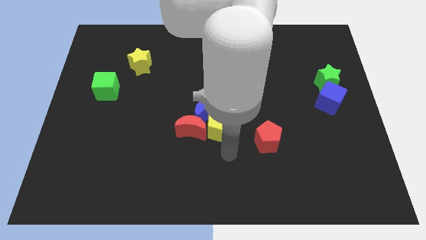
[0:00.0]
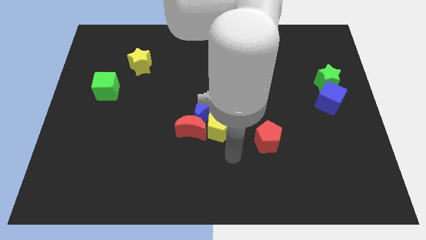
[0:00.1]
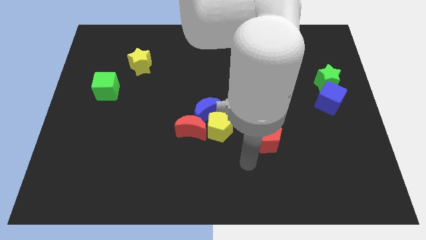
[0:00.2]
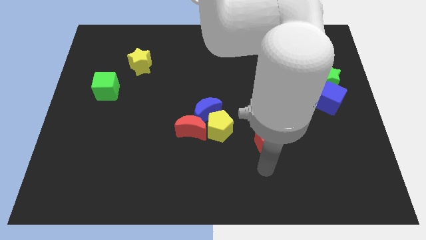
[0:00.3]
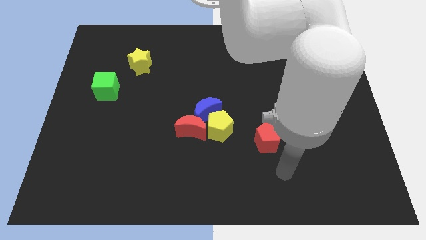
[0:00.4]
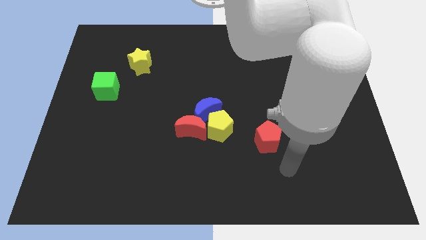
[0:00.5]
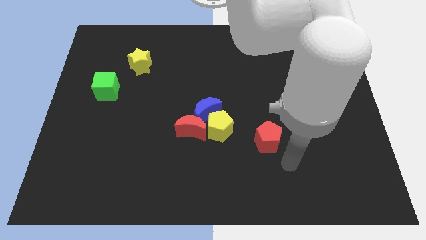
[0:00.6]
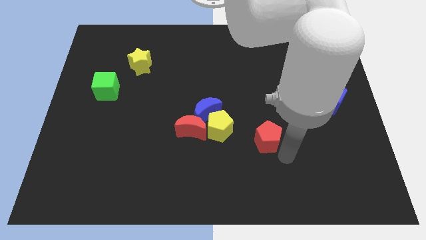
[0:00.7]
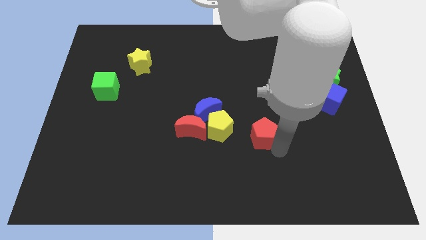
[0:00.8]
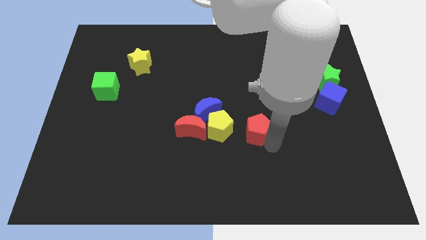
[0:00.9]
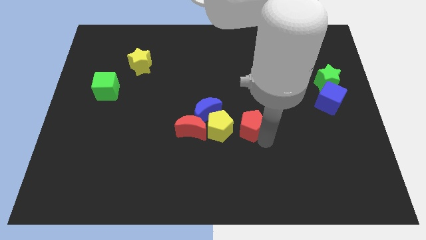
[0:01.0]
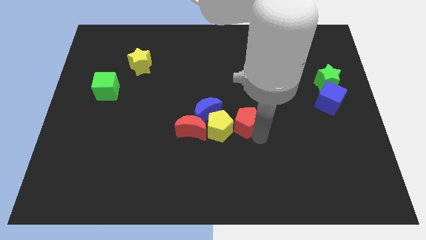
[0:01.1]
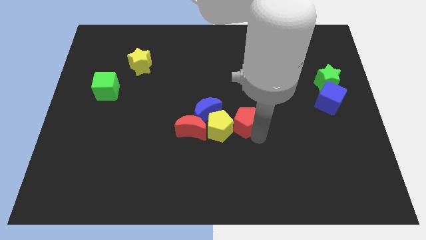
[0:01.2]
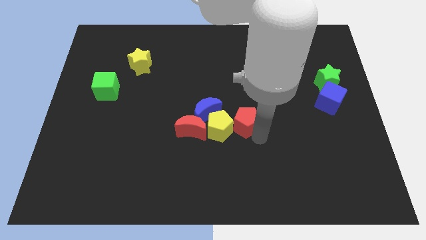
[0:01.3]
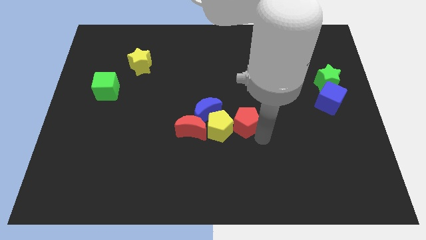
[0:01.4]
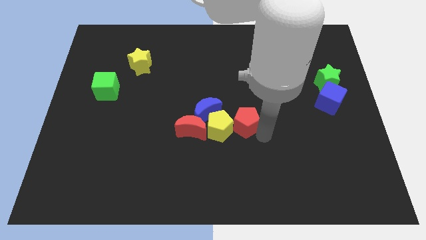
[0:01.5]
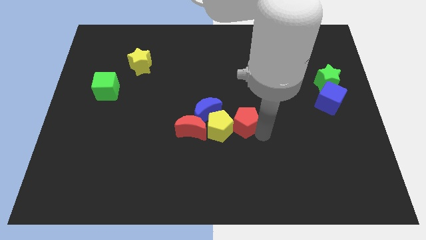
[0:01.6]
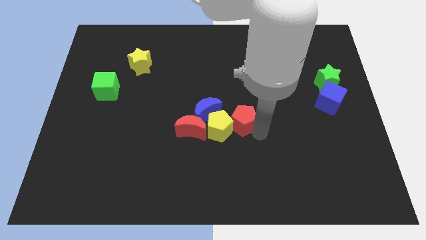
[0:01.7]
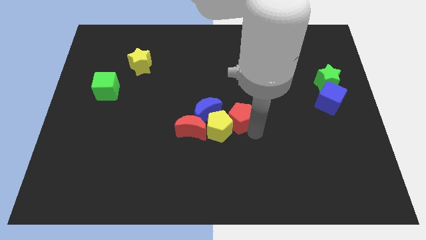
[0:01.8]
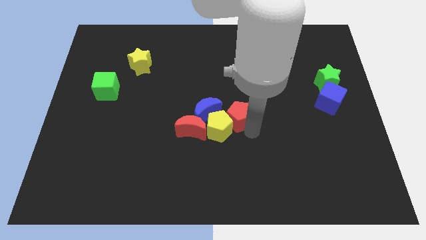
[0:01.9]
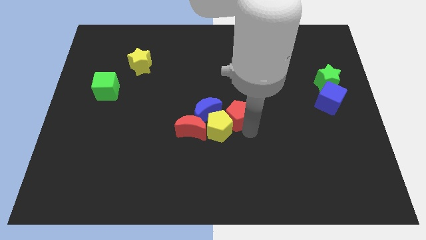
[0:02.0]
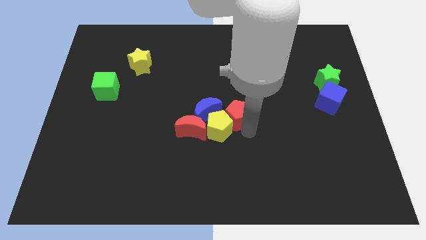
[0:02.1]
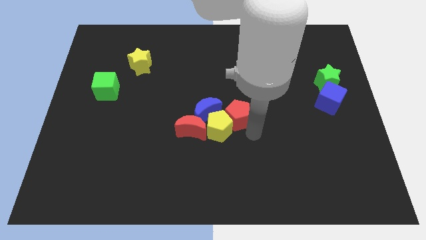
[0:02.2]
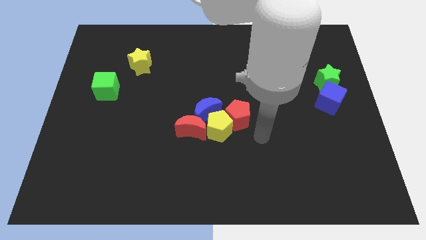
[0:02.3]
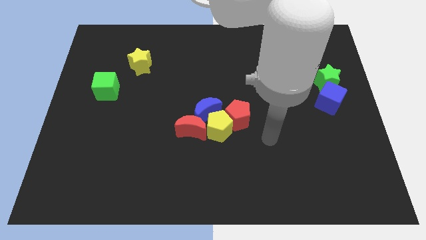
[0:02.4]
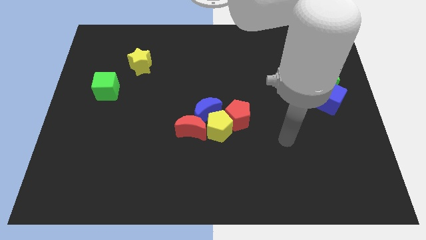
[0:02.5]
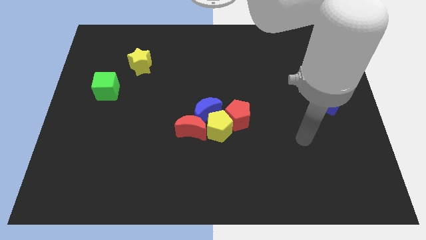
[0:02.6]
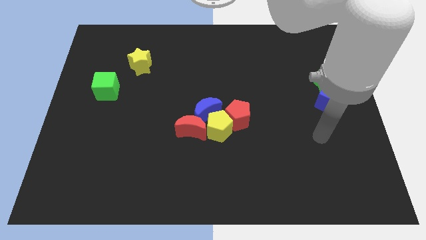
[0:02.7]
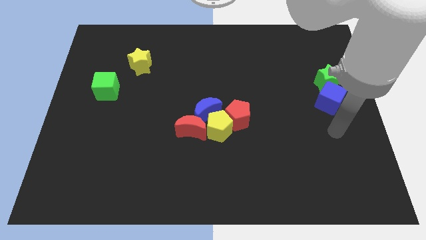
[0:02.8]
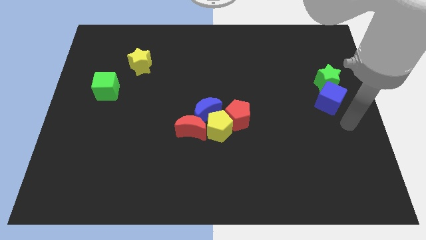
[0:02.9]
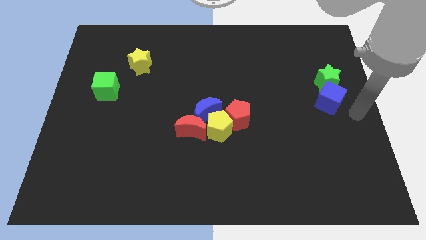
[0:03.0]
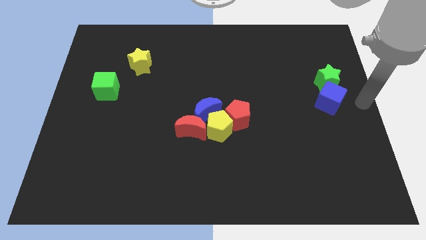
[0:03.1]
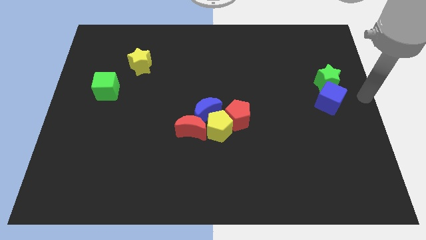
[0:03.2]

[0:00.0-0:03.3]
move red pentagon right beside the blue moon

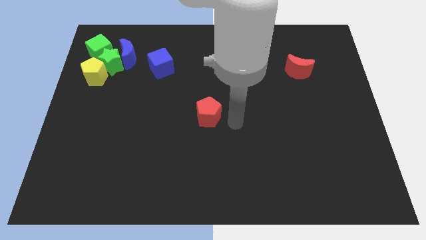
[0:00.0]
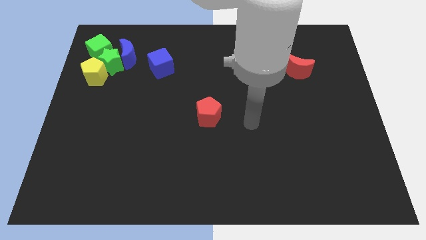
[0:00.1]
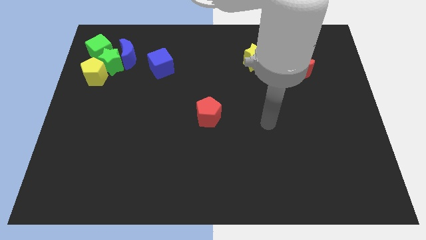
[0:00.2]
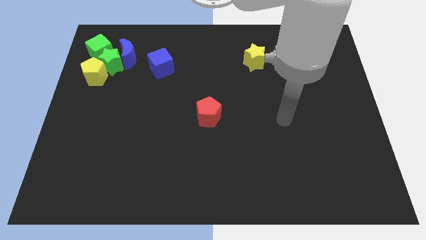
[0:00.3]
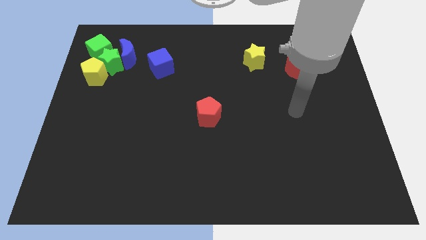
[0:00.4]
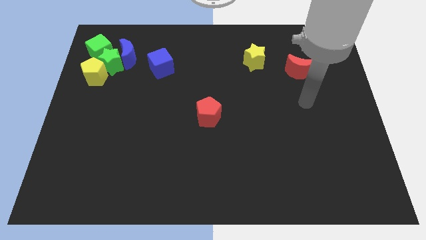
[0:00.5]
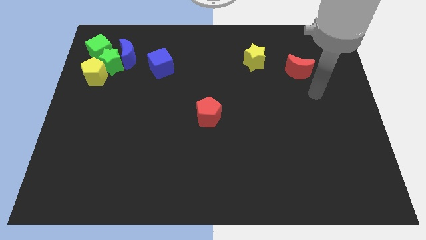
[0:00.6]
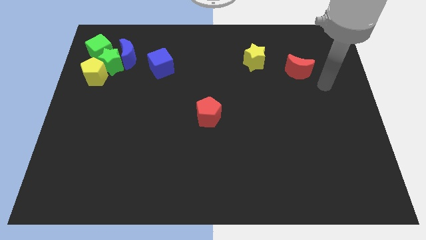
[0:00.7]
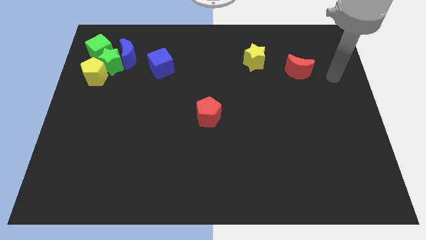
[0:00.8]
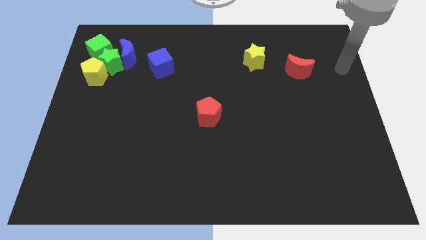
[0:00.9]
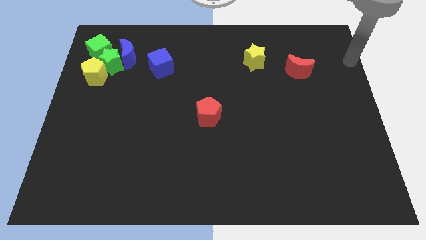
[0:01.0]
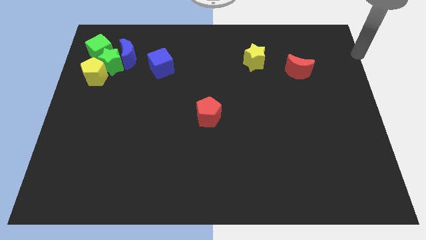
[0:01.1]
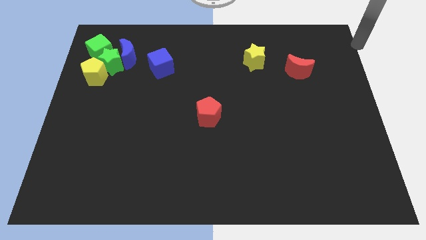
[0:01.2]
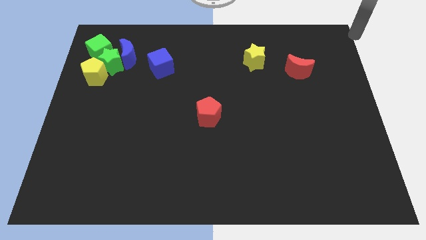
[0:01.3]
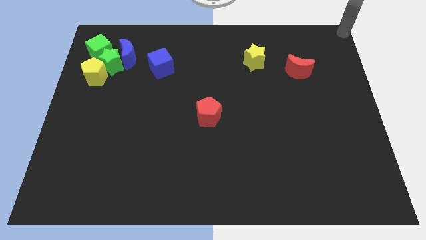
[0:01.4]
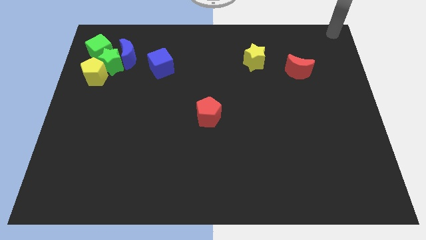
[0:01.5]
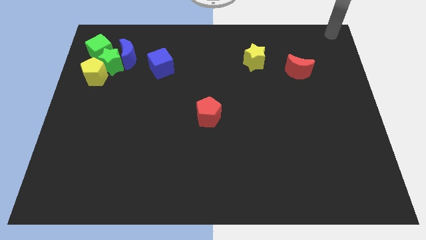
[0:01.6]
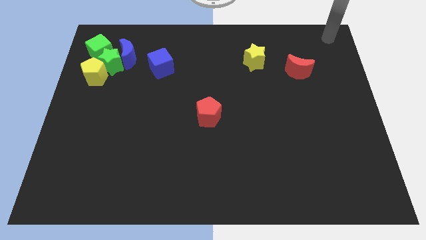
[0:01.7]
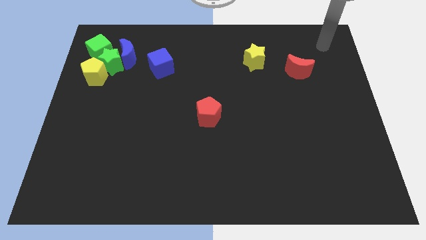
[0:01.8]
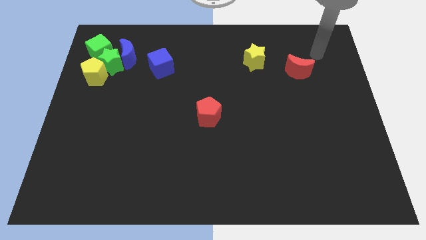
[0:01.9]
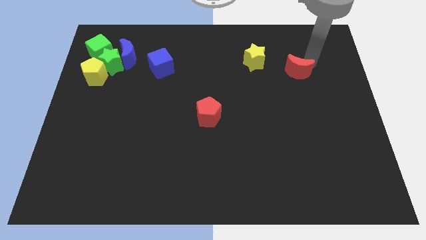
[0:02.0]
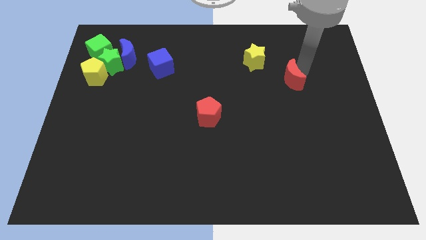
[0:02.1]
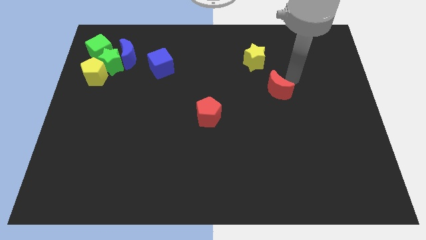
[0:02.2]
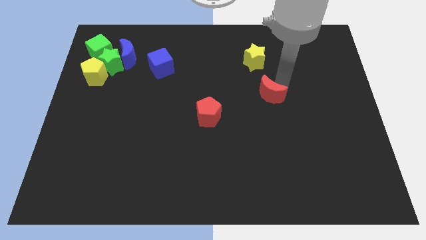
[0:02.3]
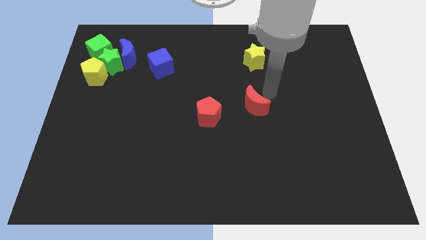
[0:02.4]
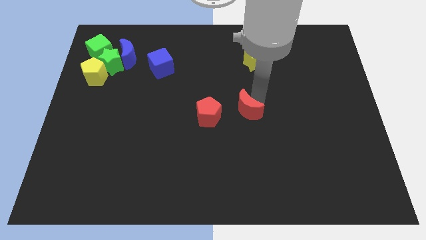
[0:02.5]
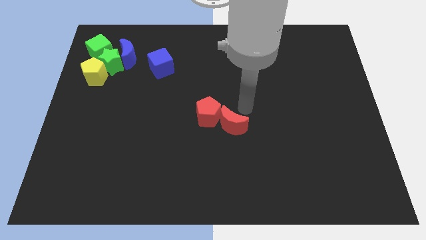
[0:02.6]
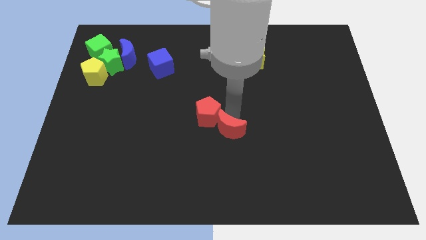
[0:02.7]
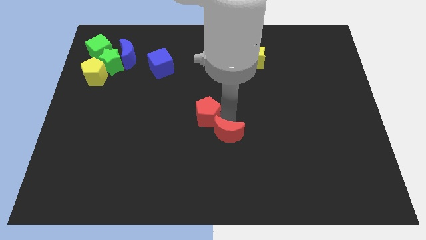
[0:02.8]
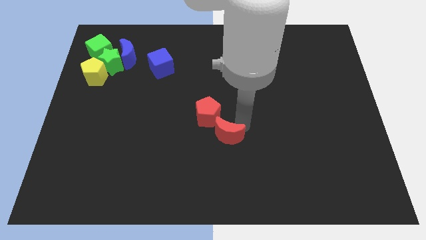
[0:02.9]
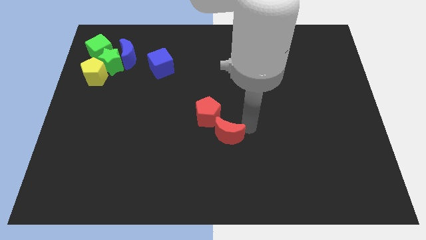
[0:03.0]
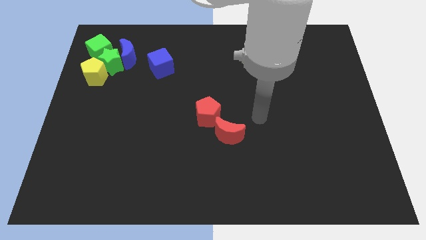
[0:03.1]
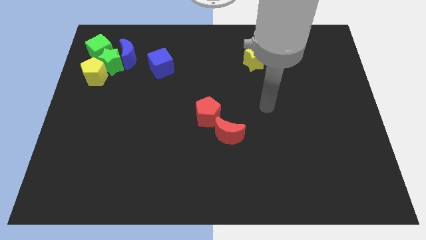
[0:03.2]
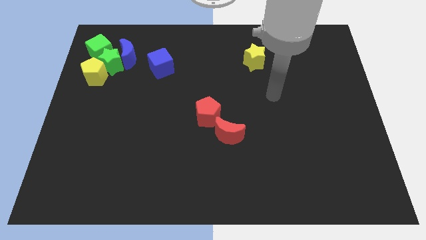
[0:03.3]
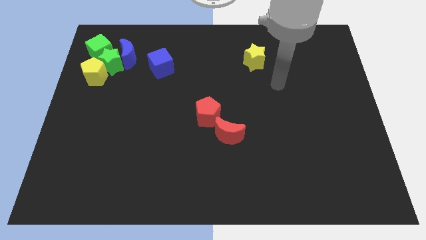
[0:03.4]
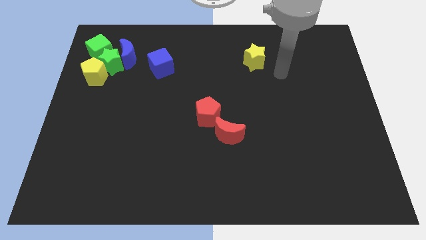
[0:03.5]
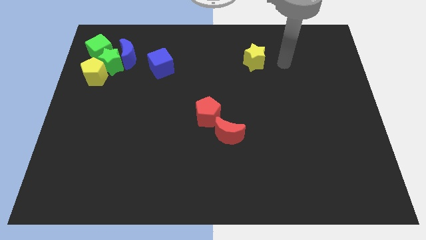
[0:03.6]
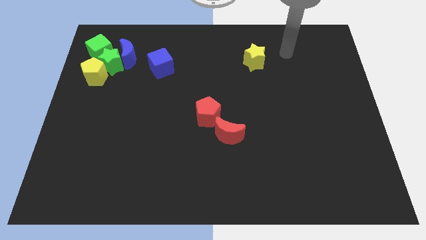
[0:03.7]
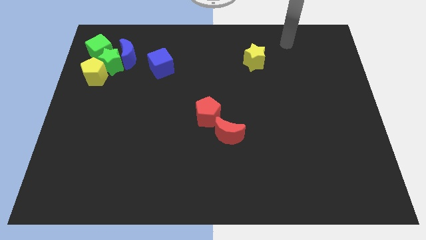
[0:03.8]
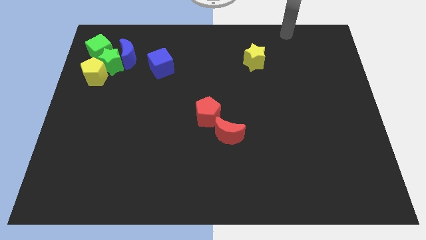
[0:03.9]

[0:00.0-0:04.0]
slide the red moon close to the red pentagon

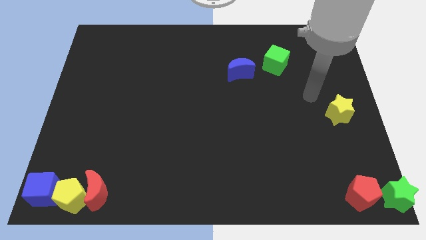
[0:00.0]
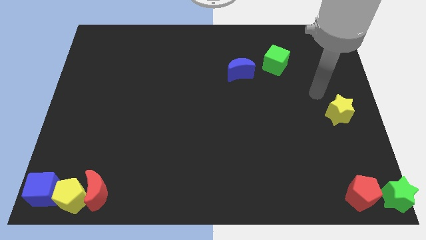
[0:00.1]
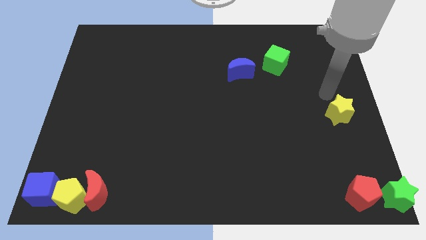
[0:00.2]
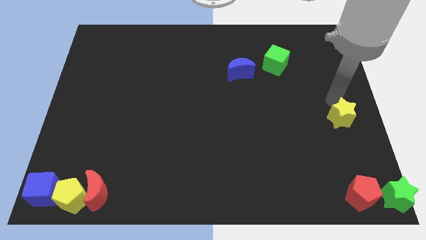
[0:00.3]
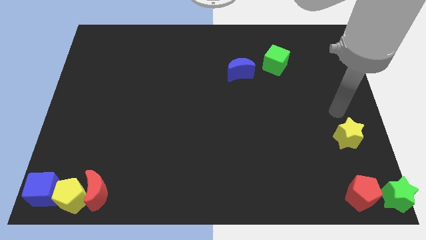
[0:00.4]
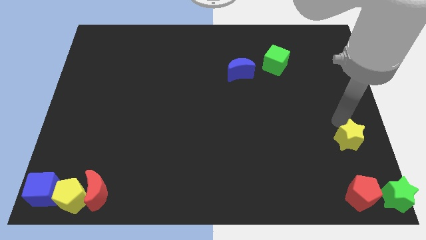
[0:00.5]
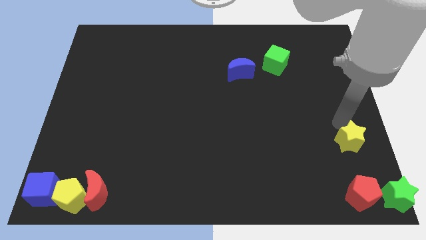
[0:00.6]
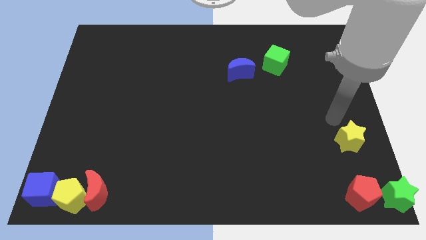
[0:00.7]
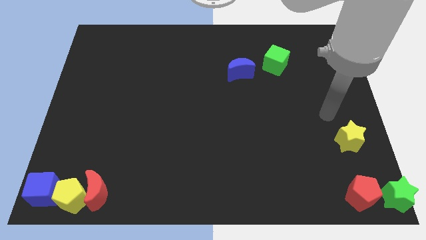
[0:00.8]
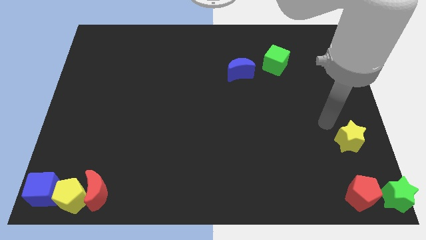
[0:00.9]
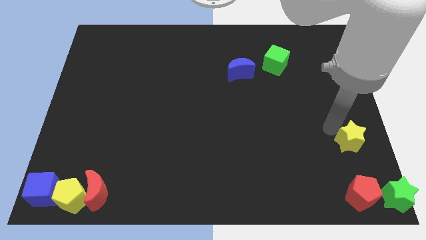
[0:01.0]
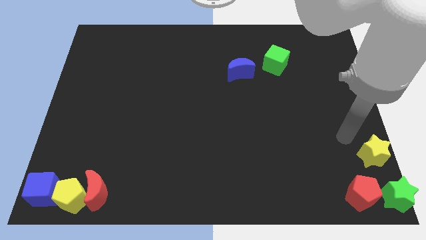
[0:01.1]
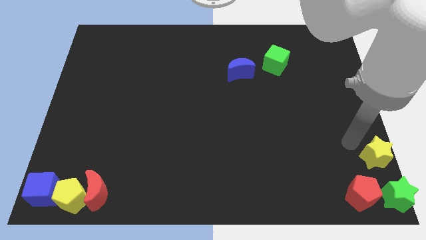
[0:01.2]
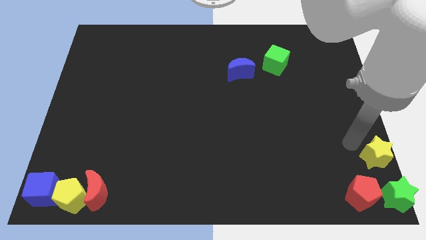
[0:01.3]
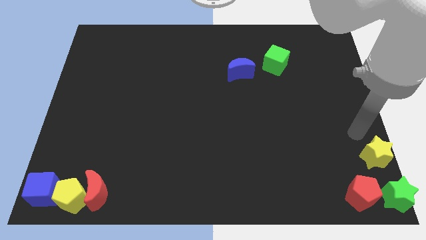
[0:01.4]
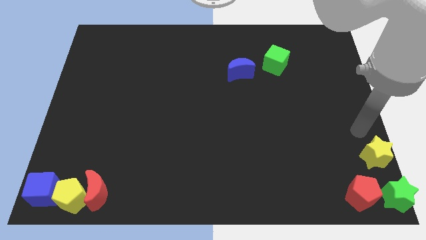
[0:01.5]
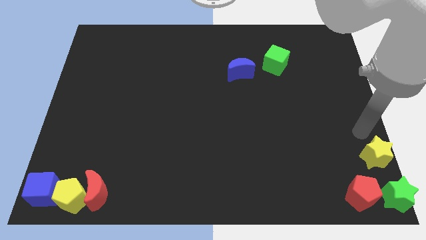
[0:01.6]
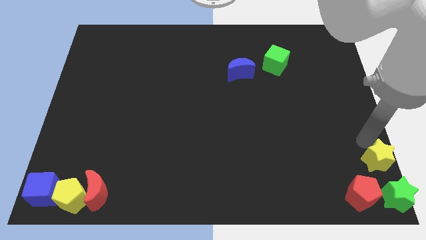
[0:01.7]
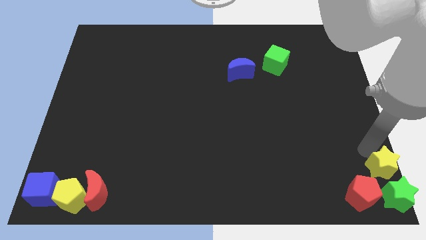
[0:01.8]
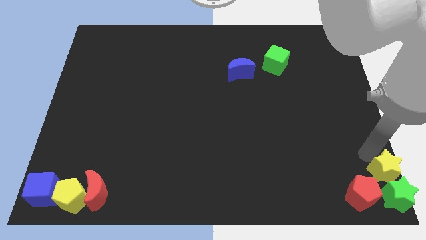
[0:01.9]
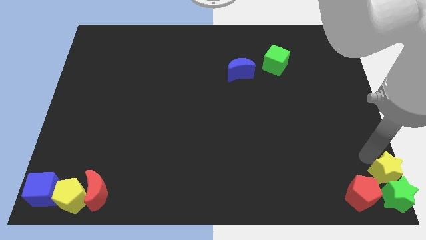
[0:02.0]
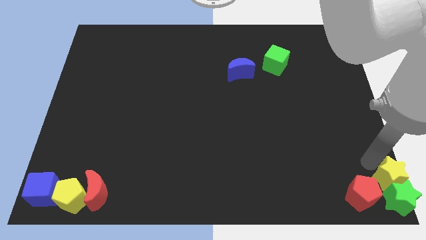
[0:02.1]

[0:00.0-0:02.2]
move the yellow star towards the green star
